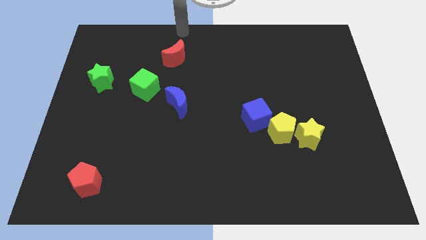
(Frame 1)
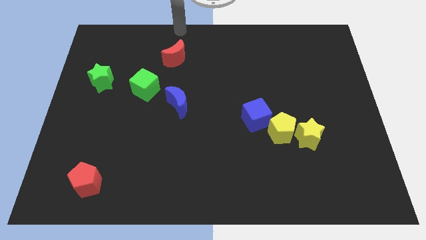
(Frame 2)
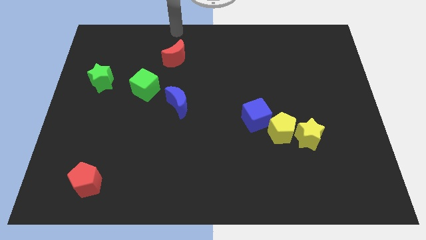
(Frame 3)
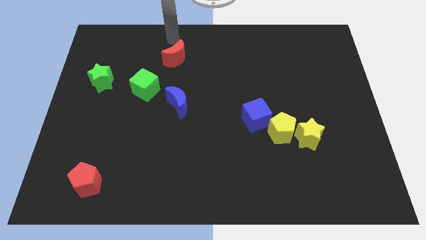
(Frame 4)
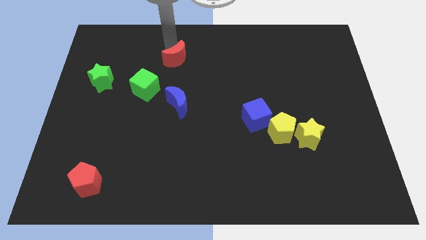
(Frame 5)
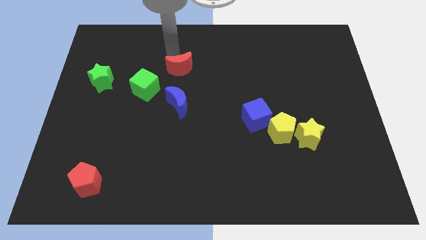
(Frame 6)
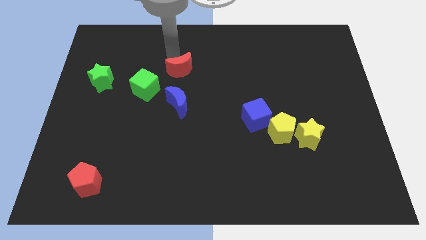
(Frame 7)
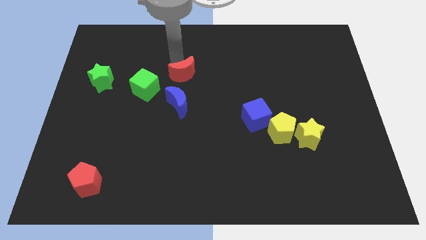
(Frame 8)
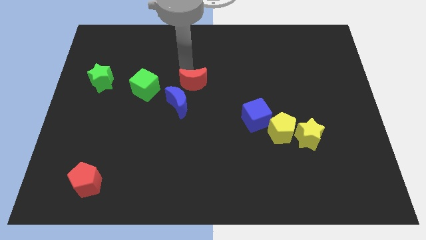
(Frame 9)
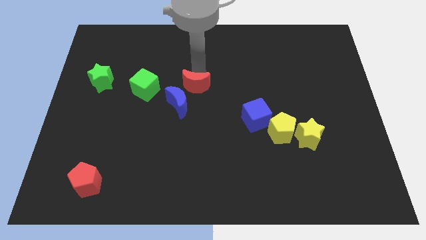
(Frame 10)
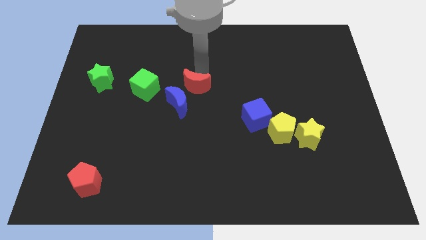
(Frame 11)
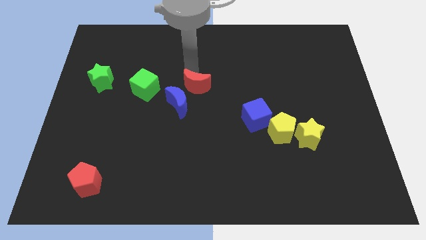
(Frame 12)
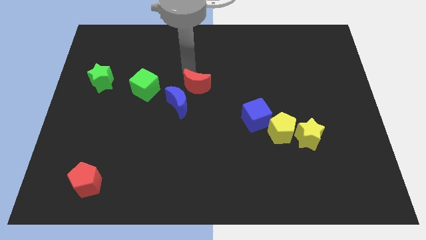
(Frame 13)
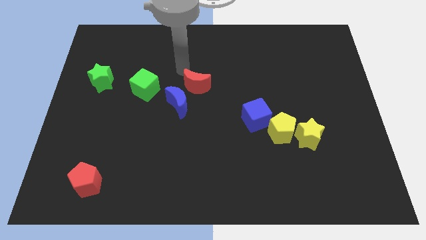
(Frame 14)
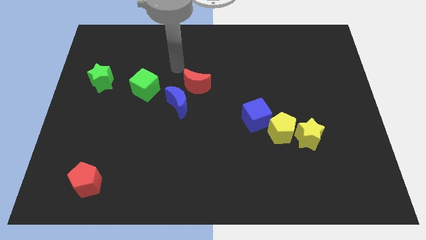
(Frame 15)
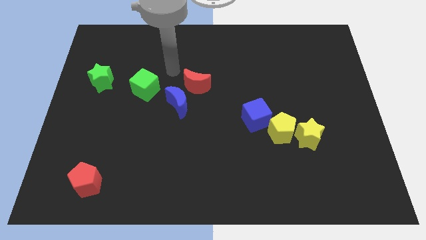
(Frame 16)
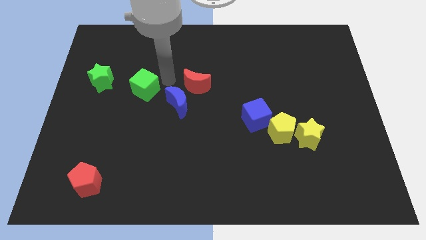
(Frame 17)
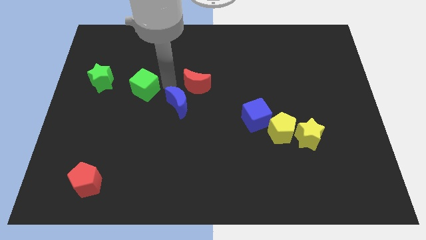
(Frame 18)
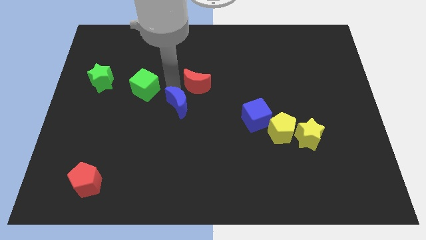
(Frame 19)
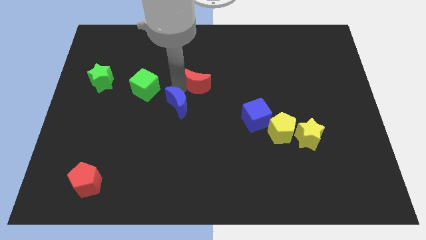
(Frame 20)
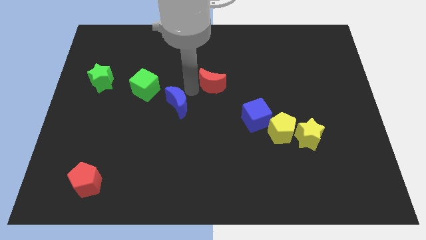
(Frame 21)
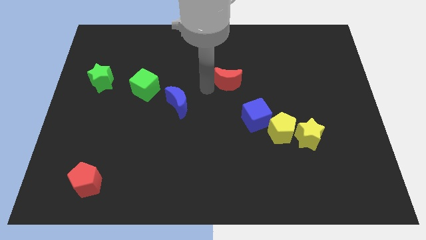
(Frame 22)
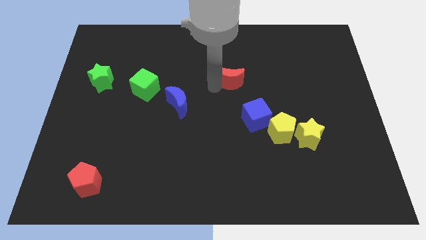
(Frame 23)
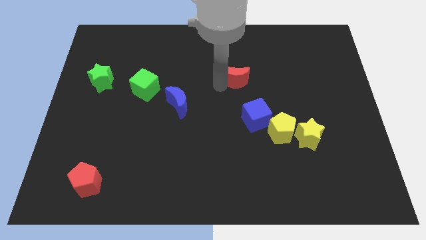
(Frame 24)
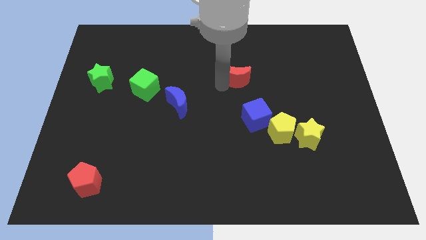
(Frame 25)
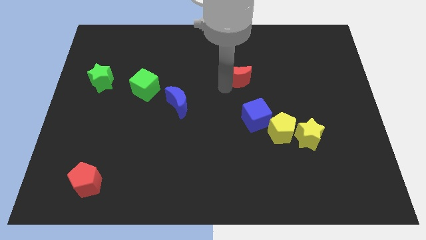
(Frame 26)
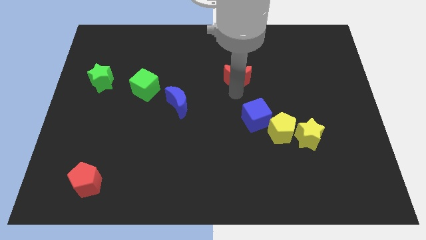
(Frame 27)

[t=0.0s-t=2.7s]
push red crescent above blue cube

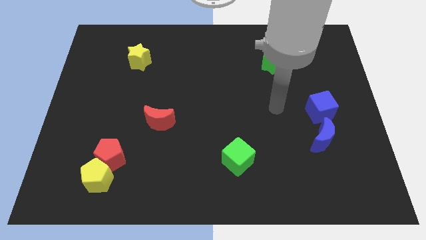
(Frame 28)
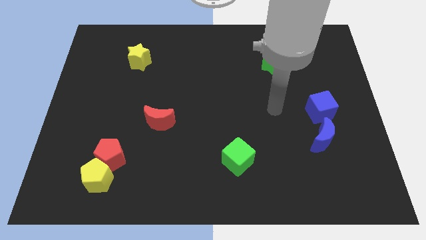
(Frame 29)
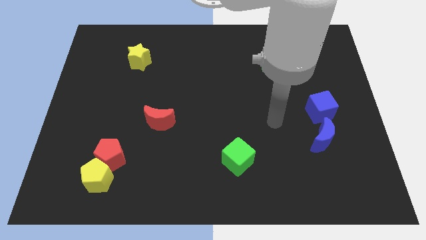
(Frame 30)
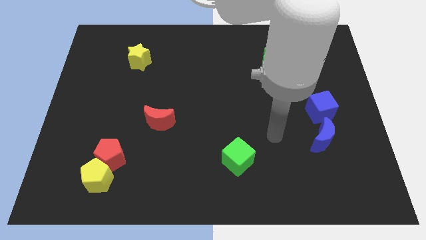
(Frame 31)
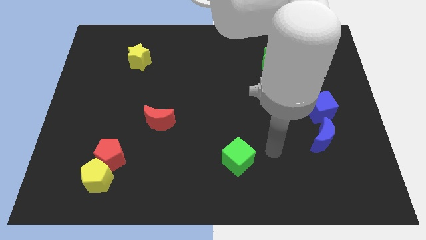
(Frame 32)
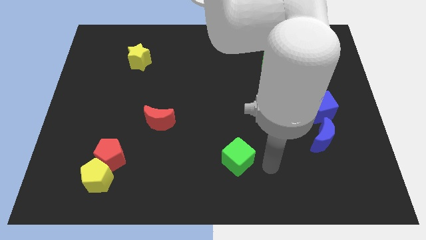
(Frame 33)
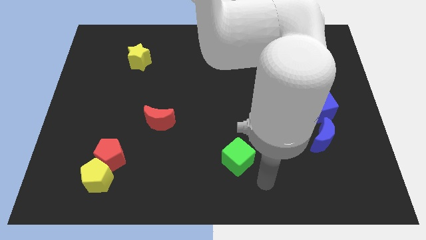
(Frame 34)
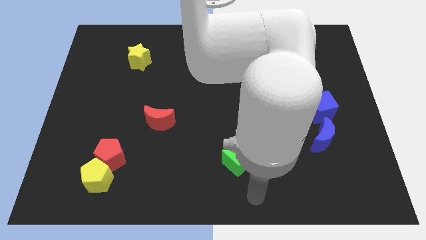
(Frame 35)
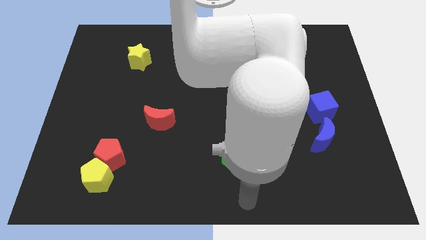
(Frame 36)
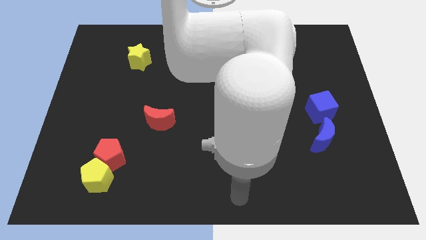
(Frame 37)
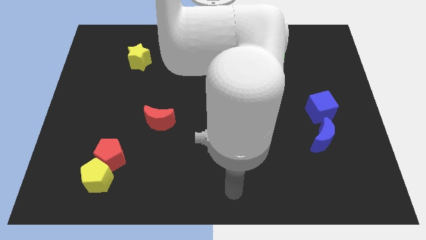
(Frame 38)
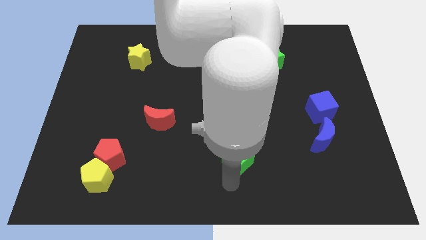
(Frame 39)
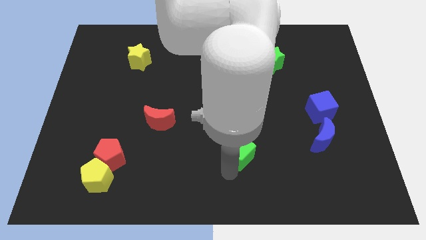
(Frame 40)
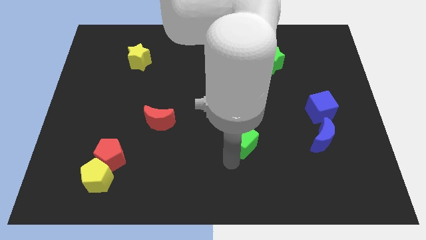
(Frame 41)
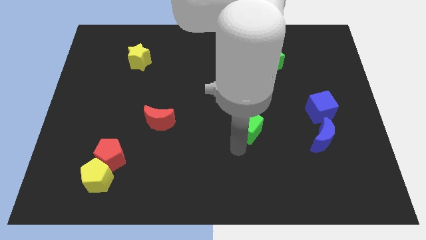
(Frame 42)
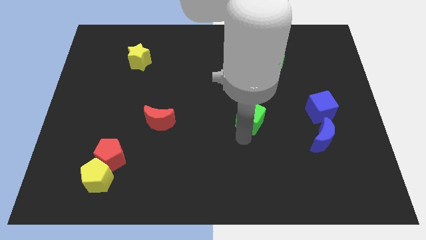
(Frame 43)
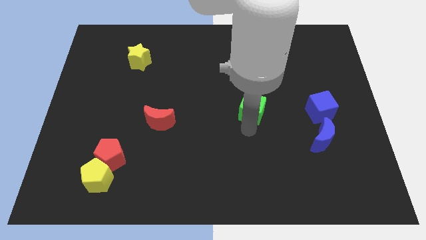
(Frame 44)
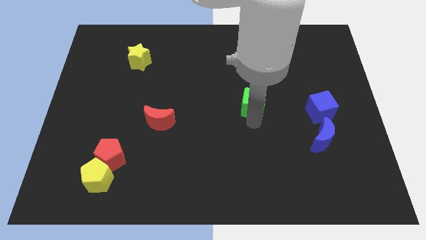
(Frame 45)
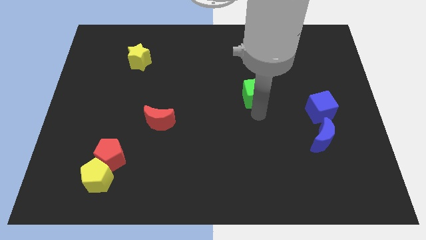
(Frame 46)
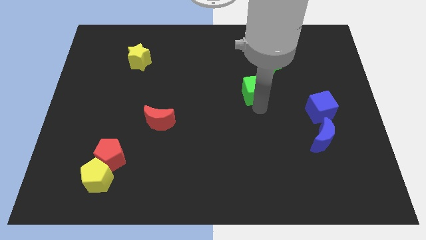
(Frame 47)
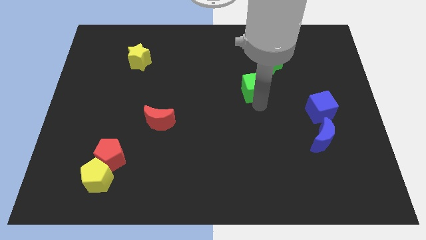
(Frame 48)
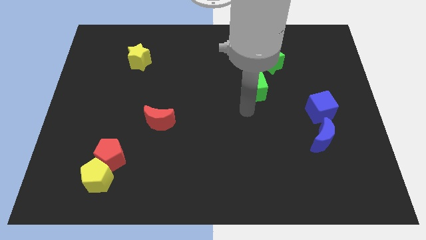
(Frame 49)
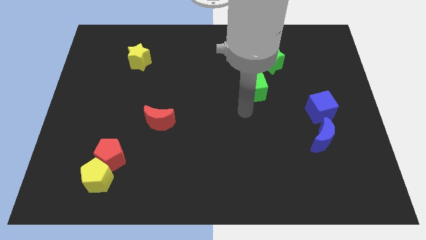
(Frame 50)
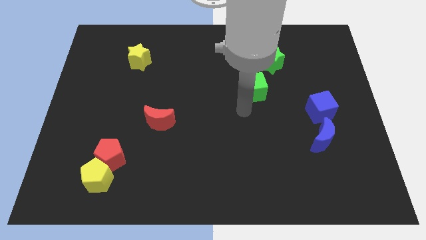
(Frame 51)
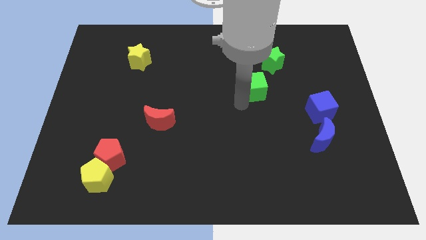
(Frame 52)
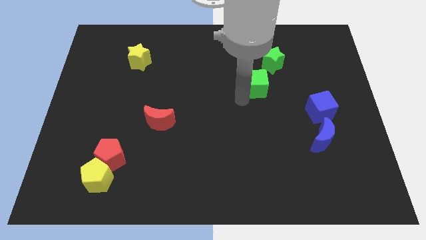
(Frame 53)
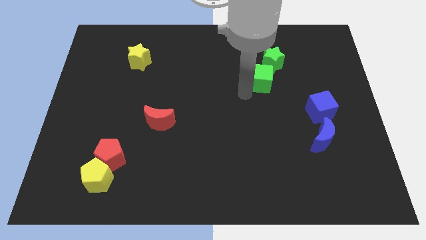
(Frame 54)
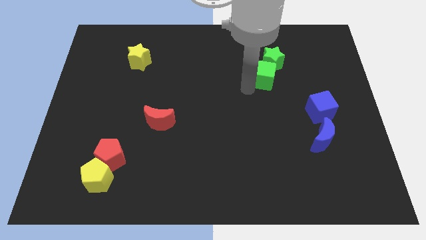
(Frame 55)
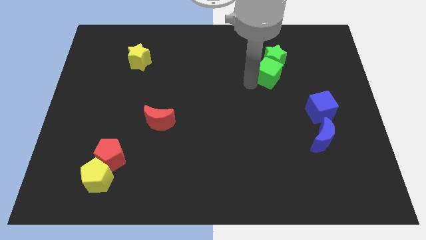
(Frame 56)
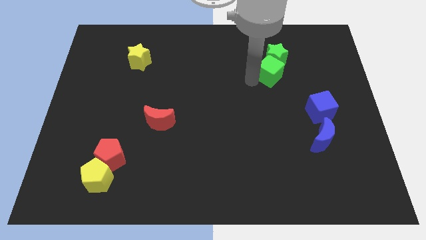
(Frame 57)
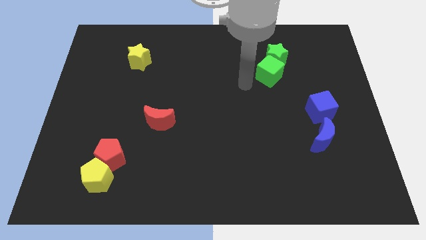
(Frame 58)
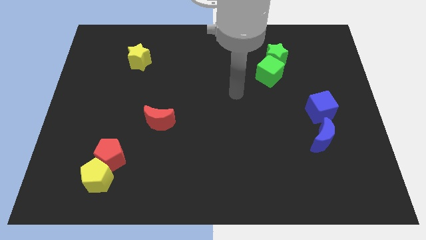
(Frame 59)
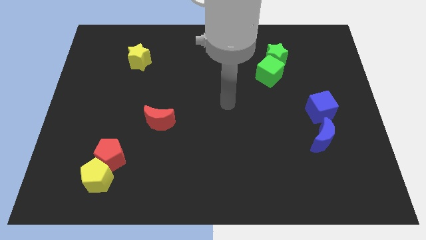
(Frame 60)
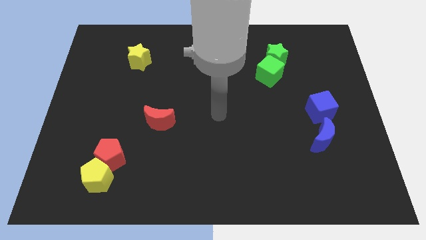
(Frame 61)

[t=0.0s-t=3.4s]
push green cube into the green star

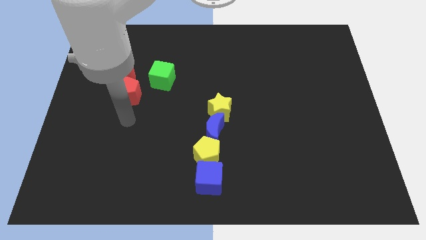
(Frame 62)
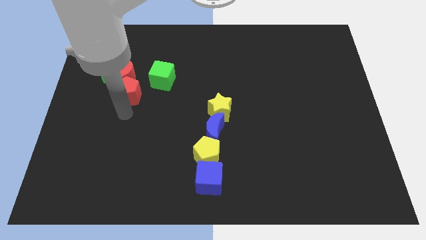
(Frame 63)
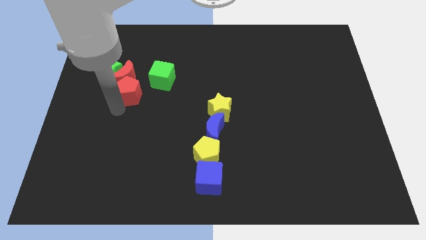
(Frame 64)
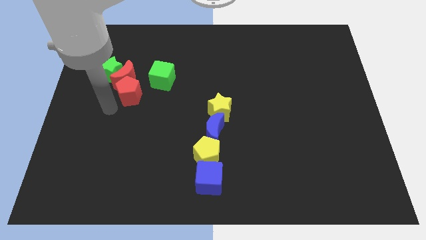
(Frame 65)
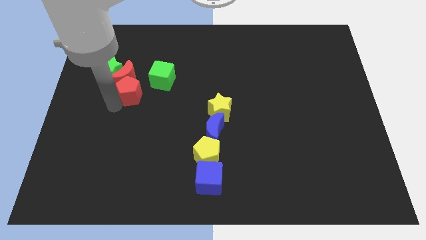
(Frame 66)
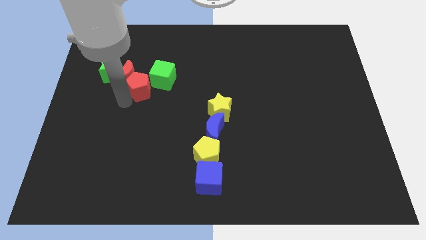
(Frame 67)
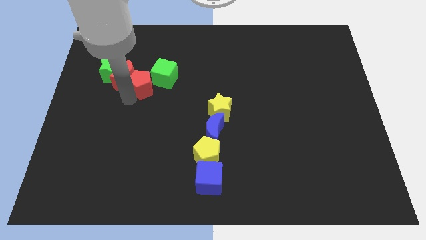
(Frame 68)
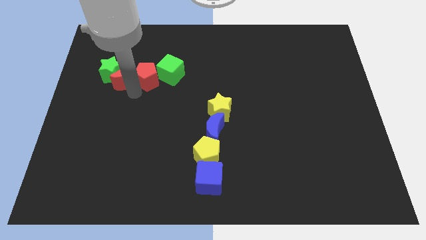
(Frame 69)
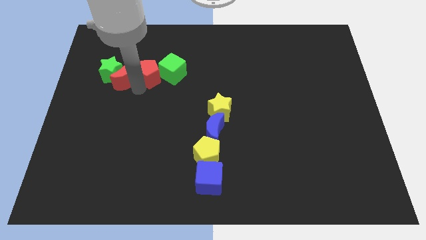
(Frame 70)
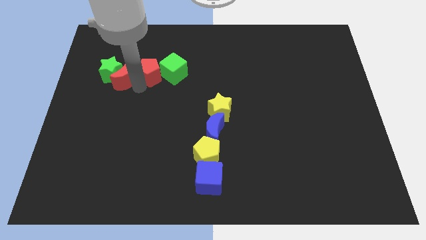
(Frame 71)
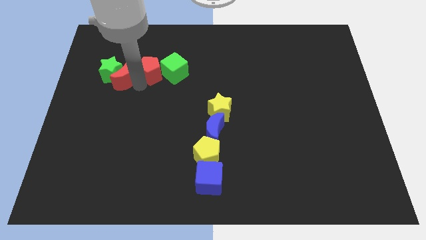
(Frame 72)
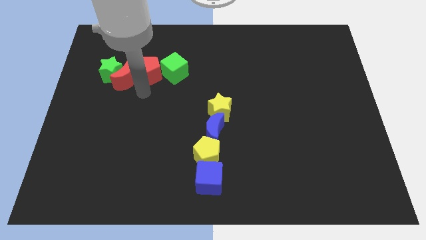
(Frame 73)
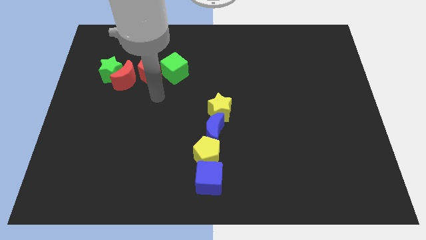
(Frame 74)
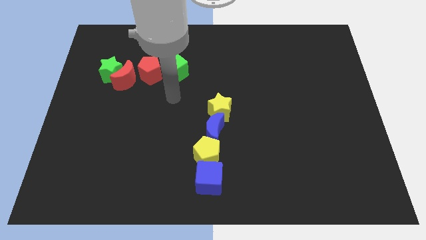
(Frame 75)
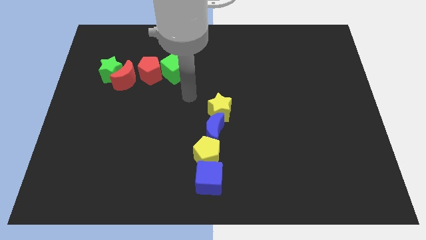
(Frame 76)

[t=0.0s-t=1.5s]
put the red pentagon to the left of the green cube

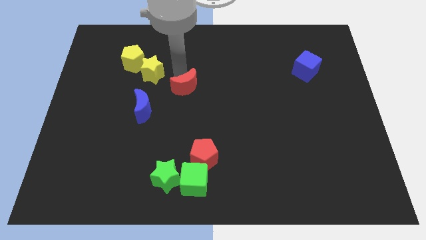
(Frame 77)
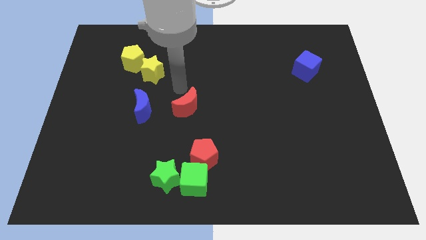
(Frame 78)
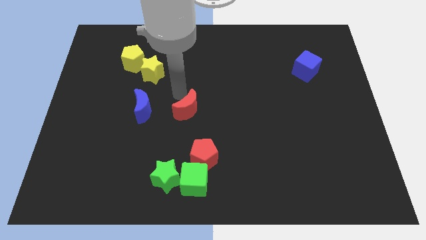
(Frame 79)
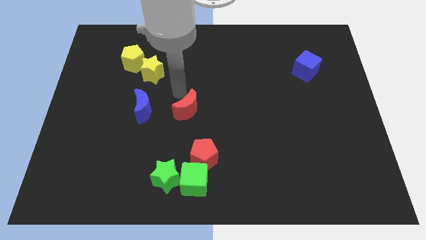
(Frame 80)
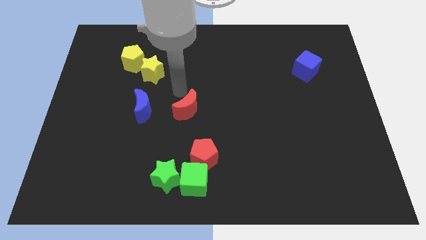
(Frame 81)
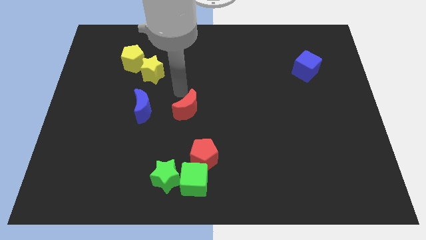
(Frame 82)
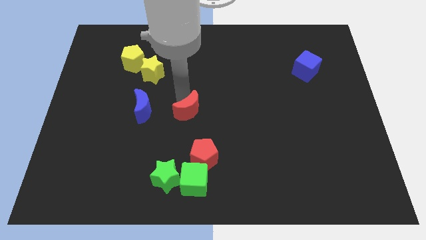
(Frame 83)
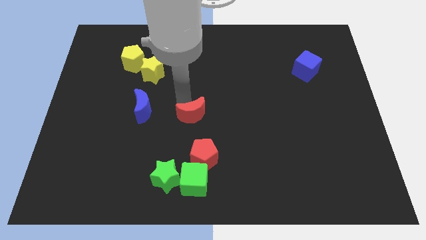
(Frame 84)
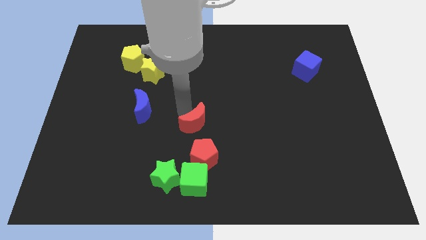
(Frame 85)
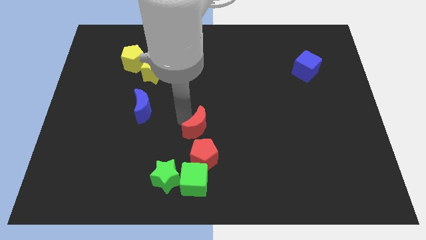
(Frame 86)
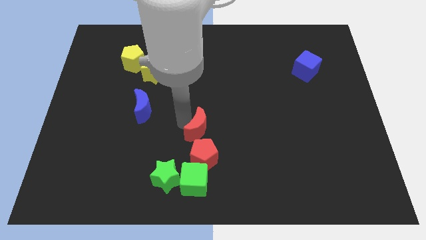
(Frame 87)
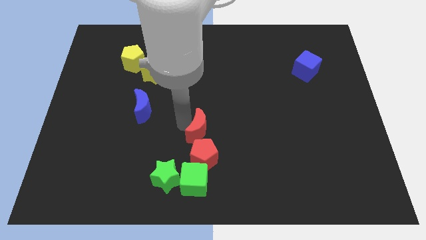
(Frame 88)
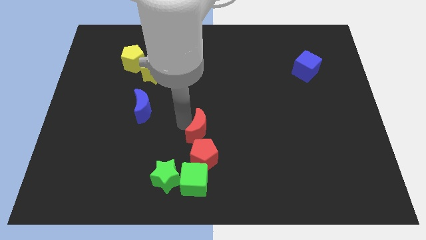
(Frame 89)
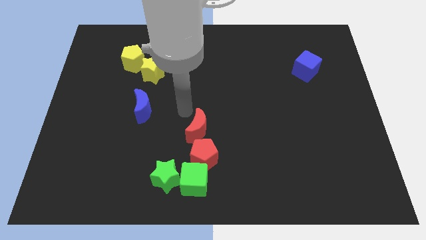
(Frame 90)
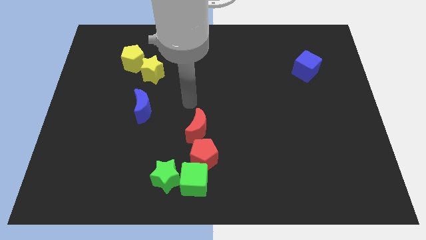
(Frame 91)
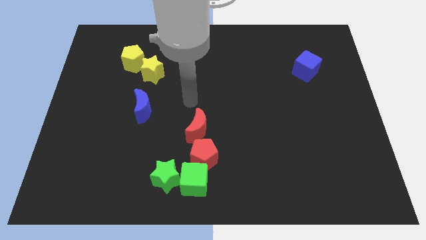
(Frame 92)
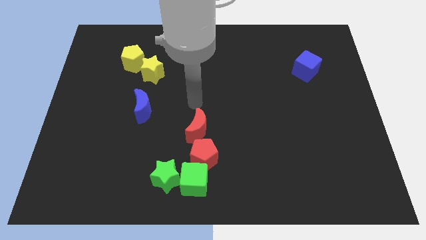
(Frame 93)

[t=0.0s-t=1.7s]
move the red moon close to the red pentagon
